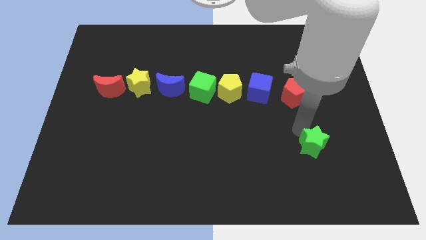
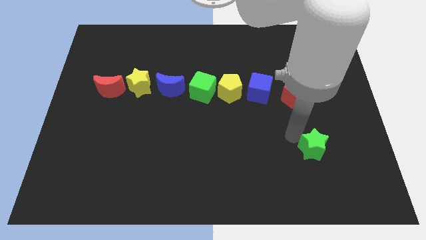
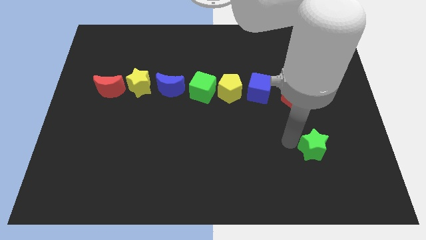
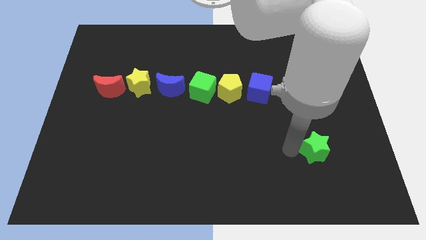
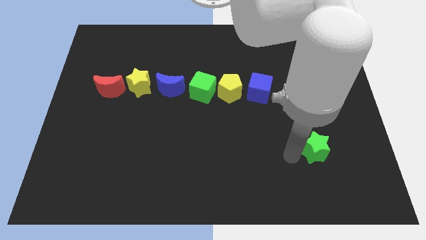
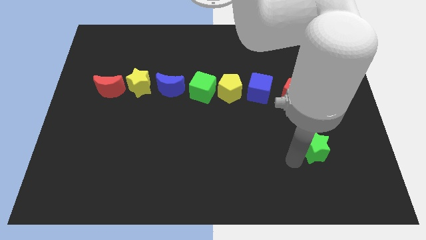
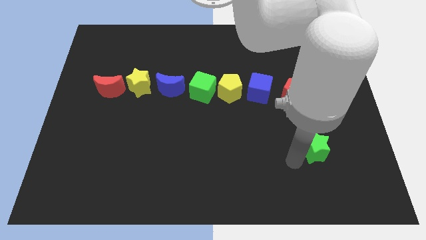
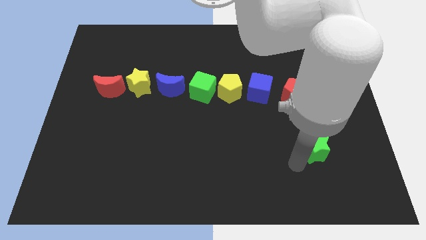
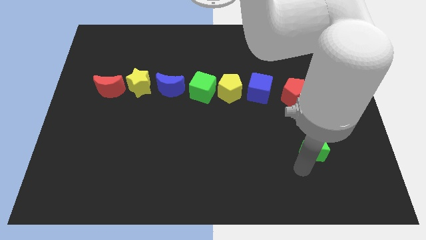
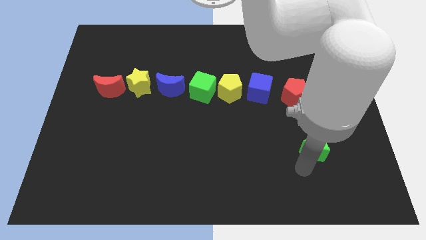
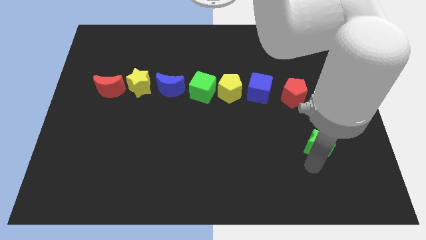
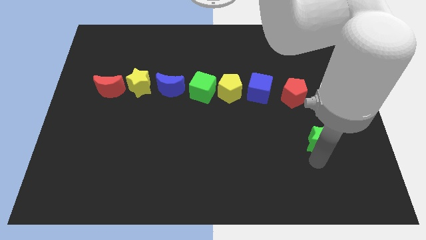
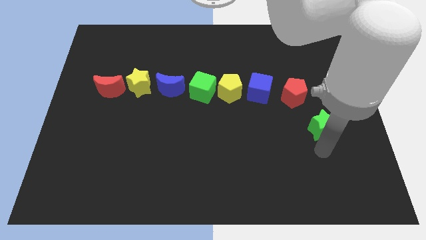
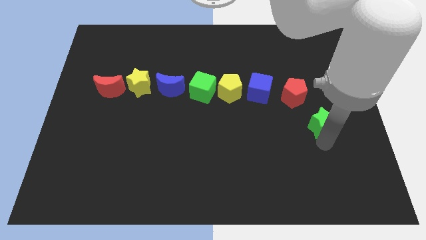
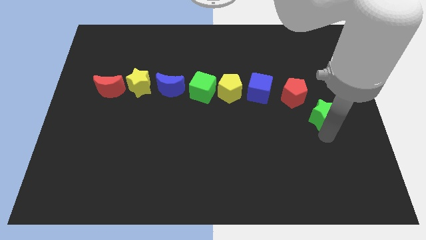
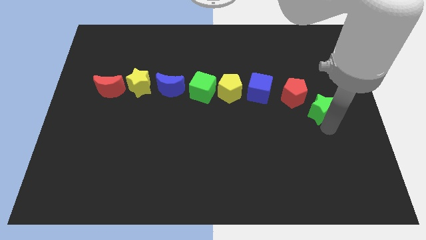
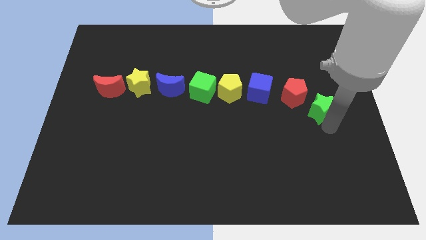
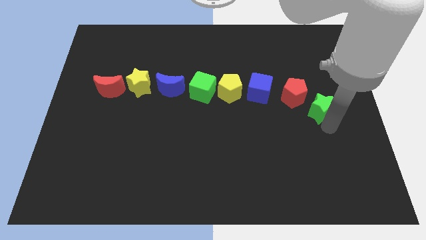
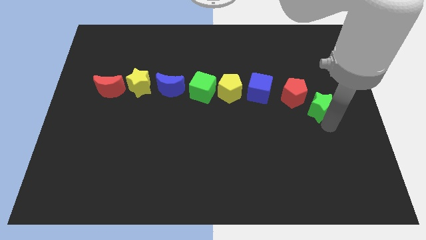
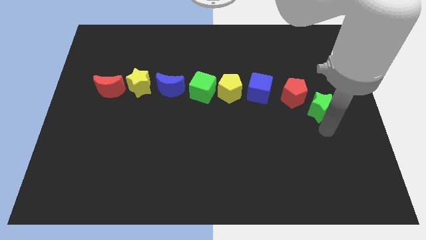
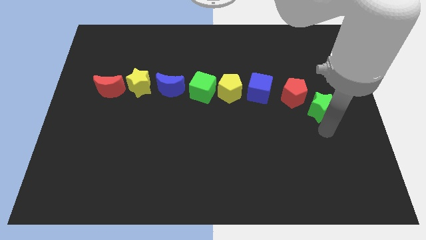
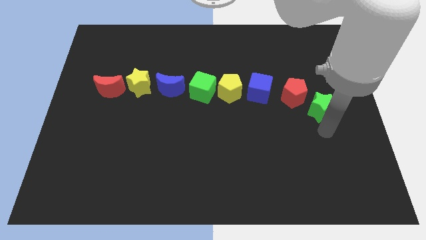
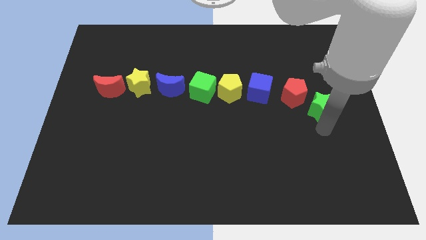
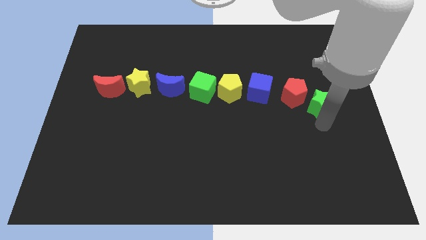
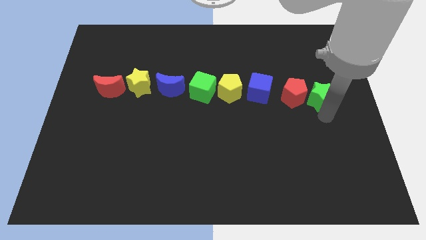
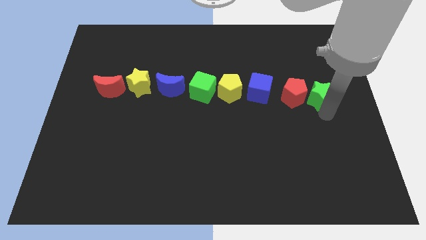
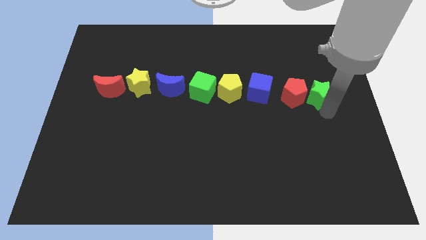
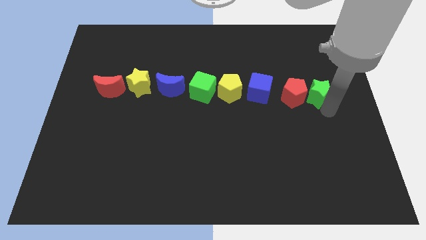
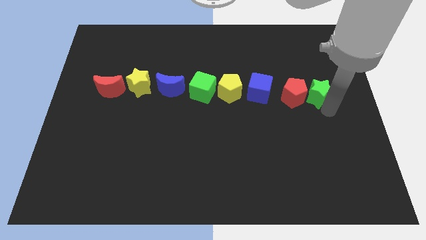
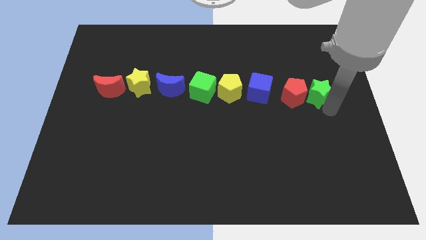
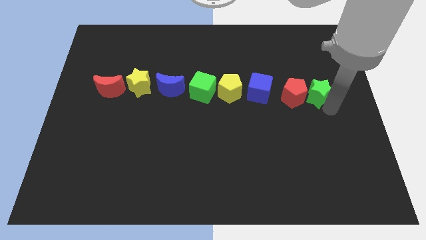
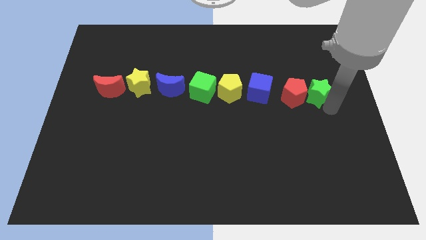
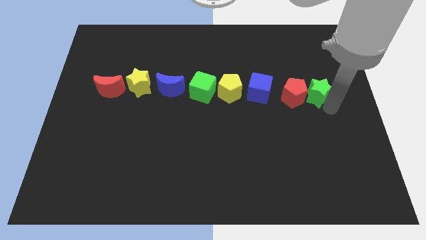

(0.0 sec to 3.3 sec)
place green star to the right of red pentagon

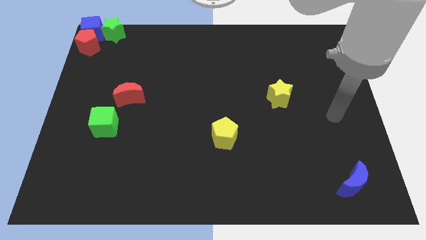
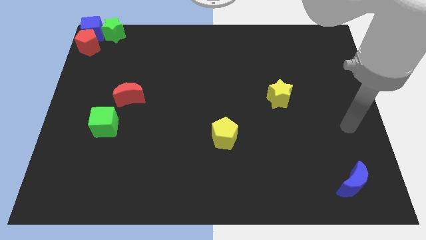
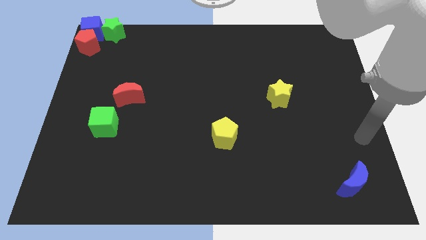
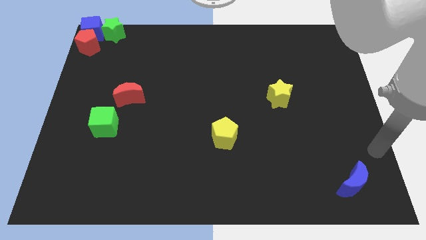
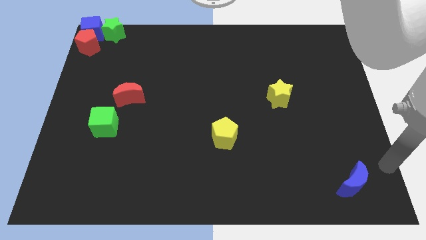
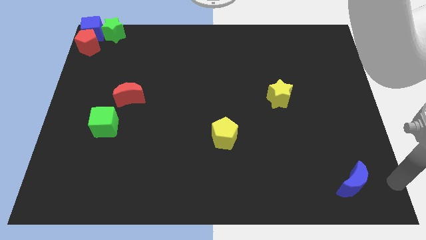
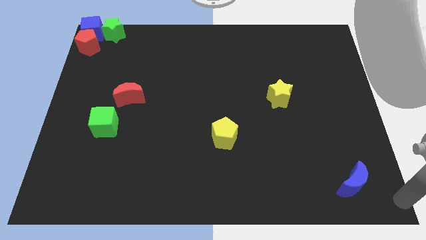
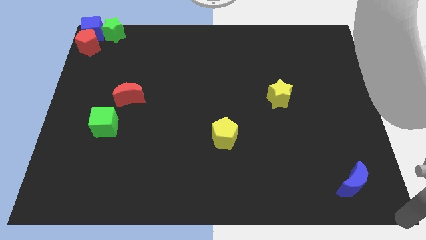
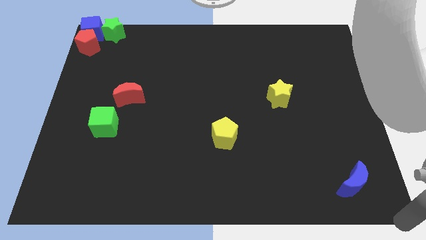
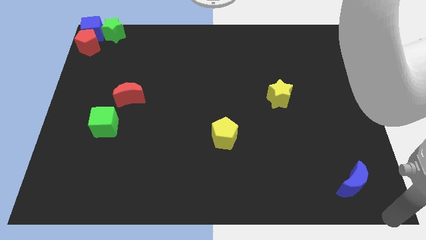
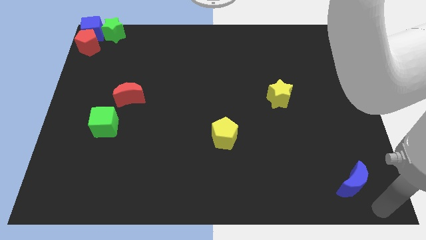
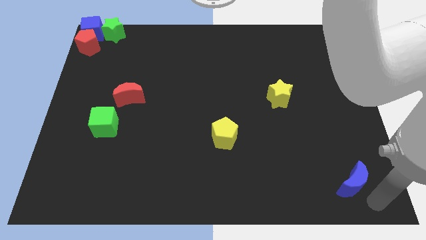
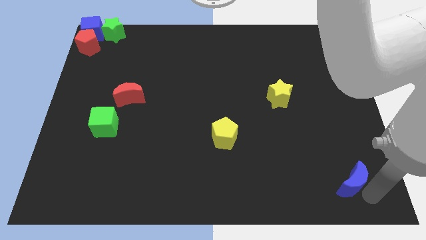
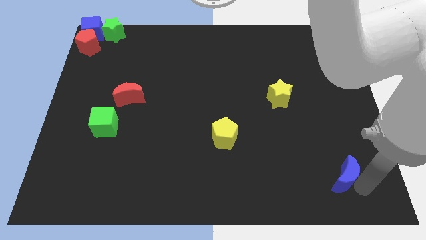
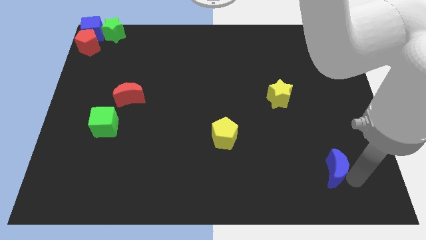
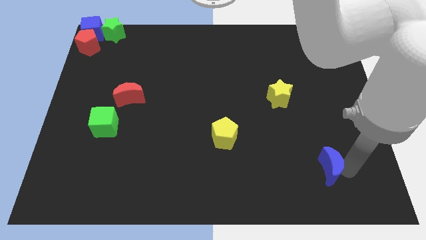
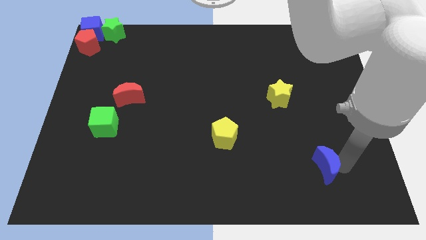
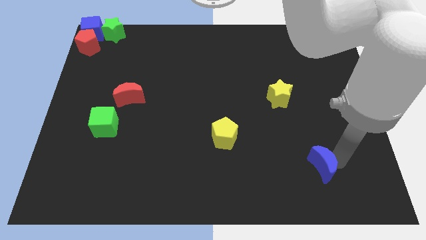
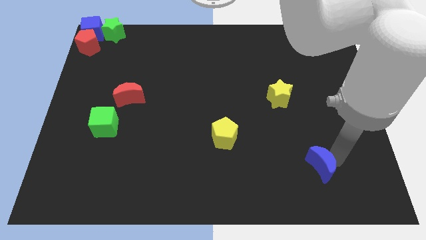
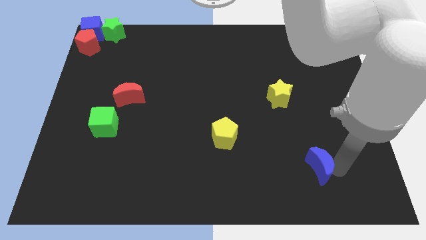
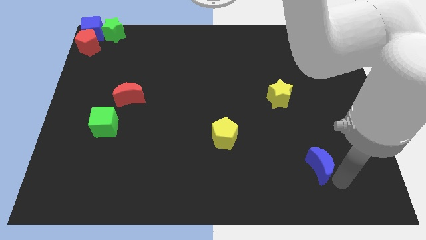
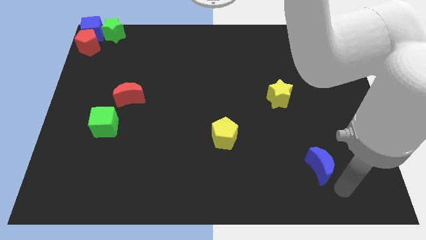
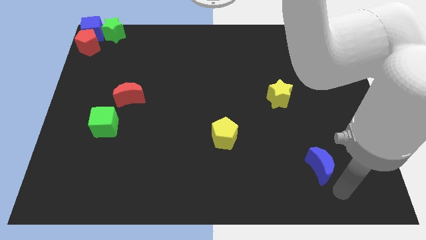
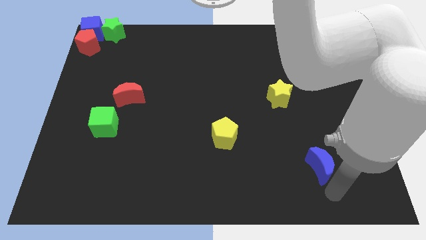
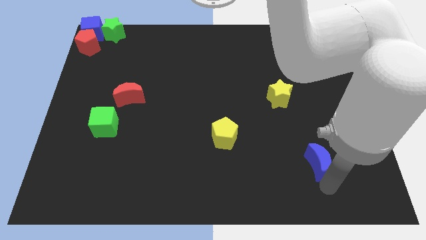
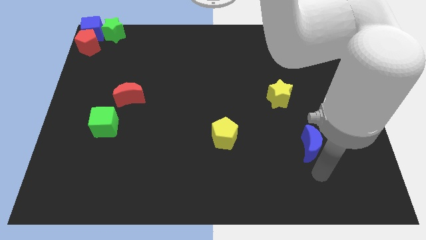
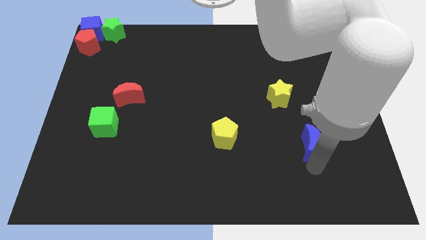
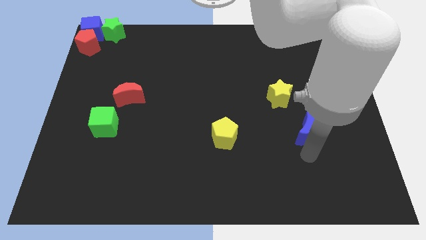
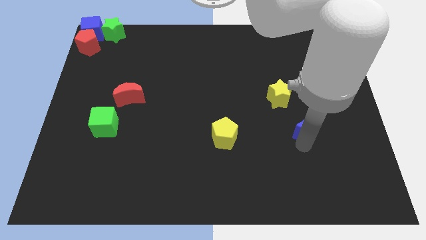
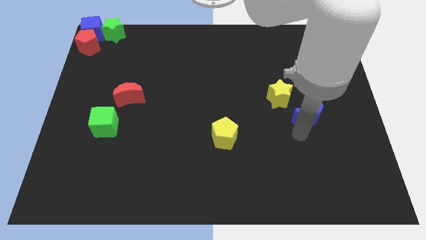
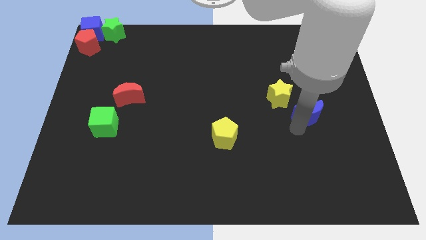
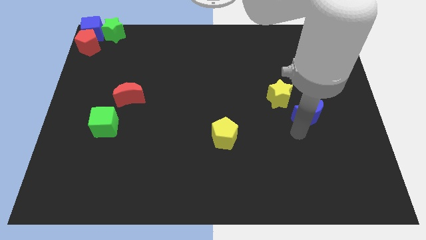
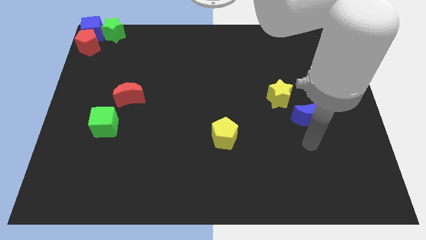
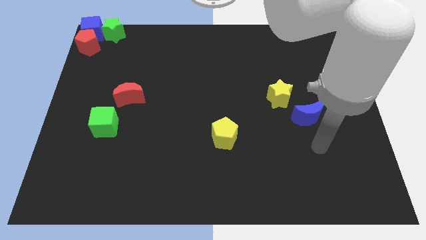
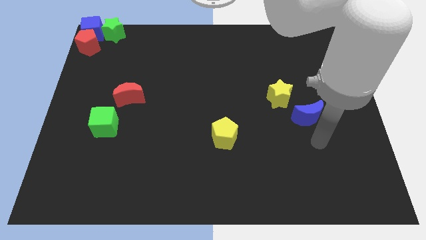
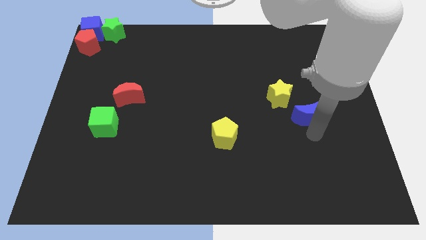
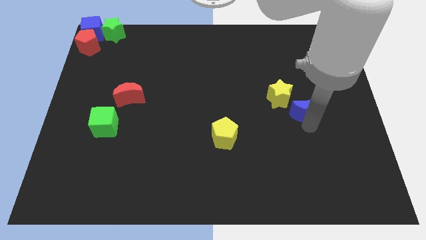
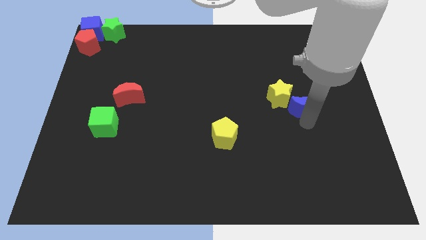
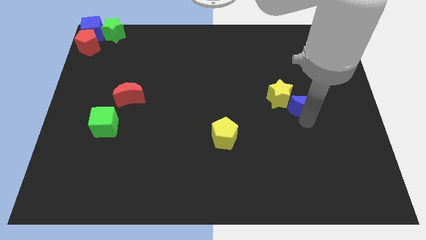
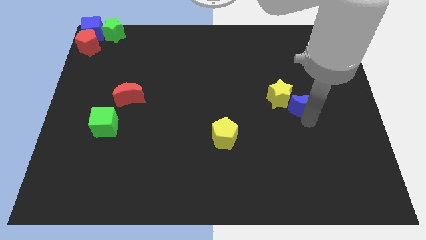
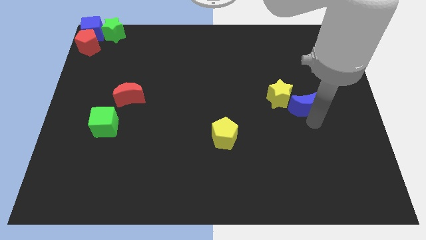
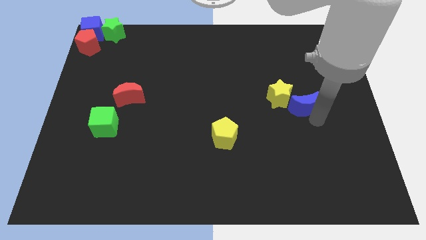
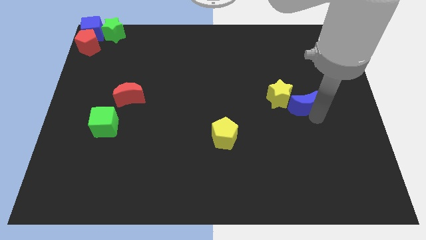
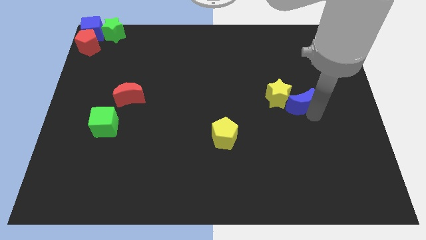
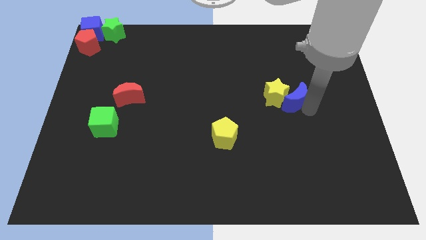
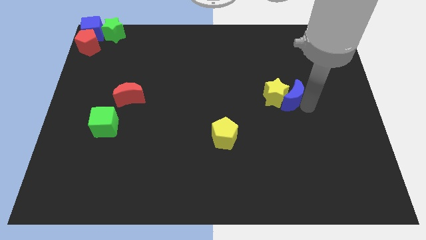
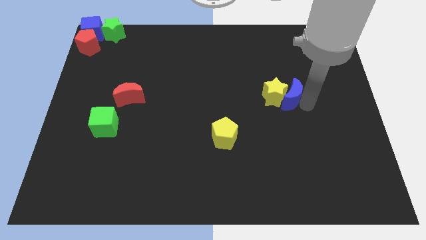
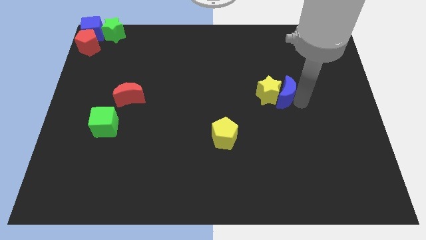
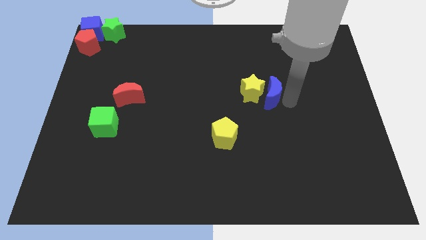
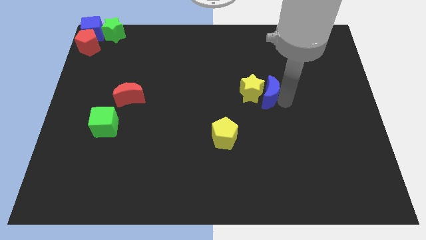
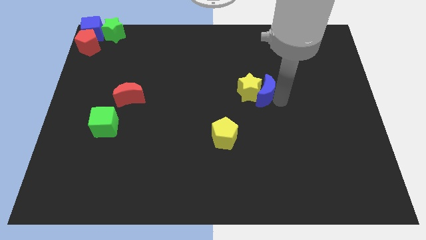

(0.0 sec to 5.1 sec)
slide blue moon to the right of the yellow star

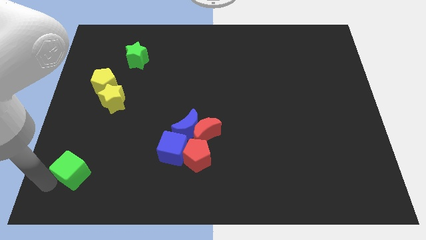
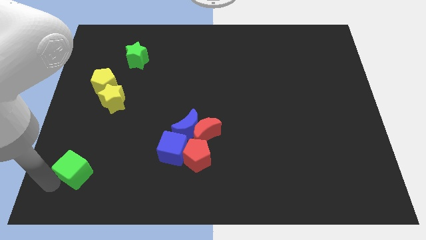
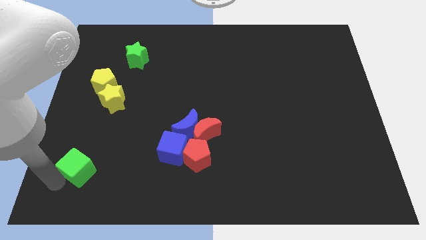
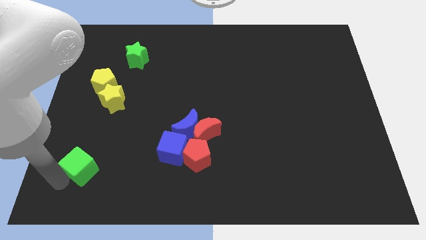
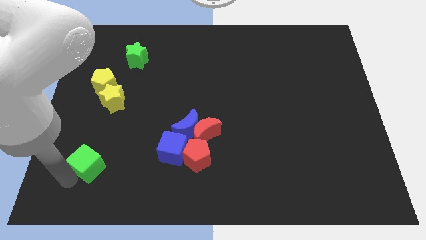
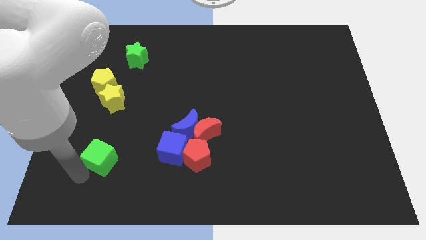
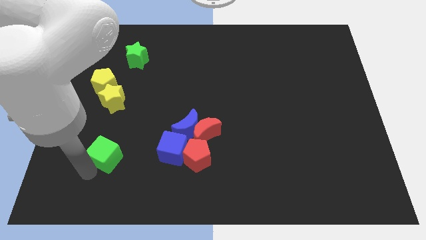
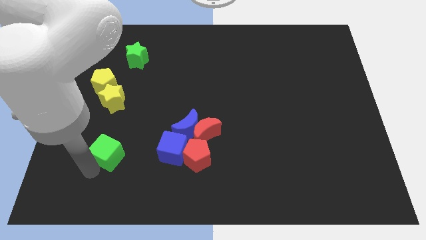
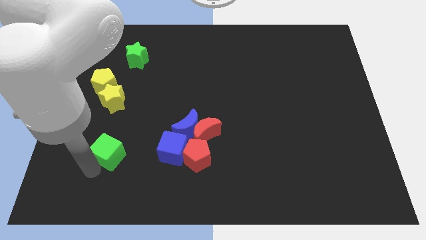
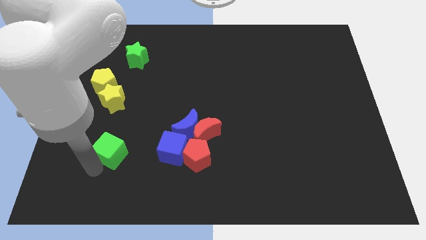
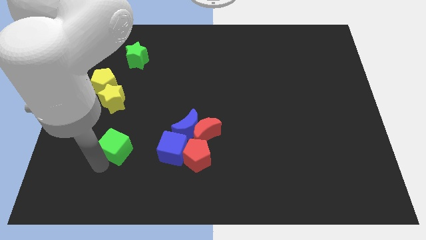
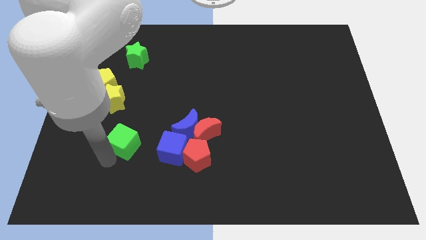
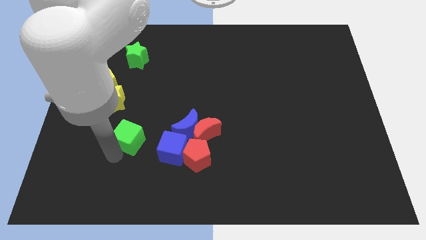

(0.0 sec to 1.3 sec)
drag the green cube to the left of the blue cube
